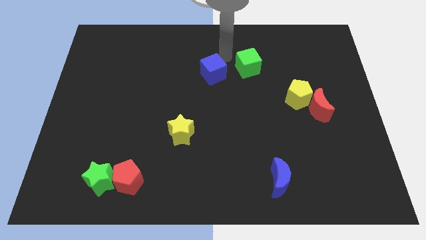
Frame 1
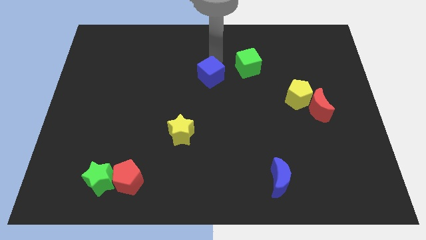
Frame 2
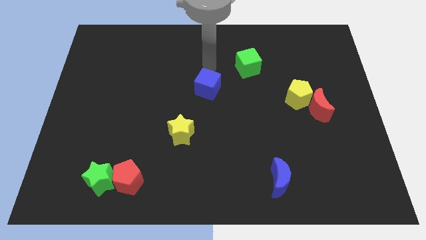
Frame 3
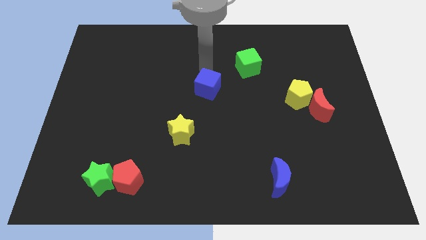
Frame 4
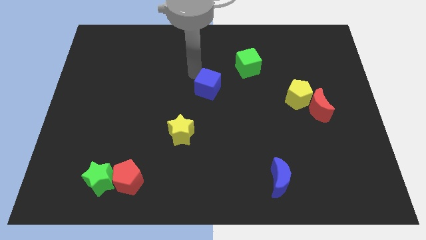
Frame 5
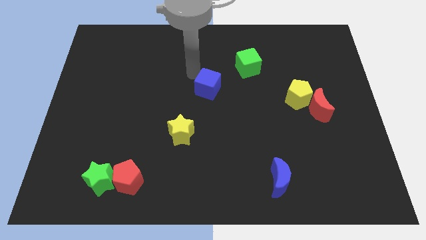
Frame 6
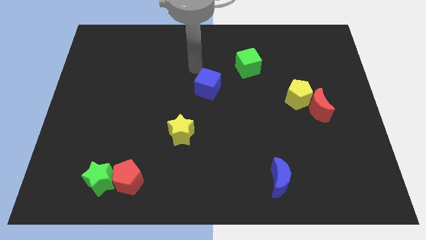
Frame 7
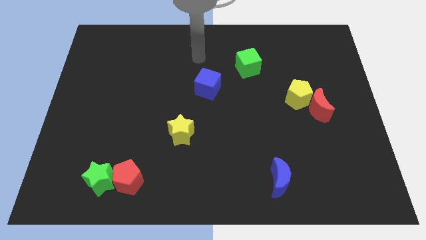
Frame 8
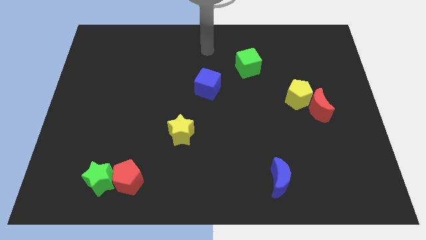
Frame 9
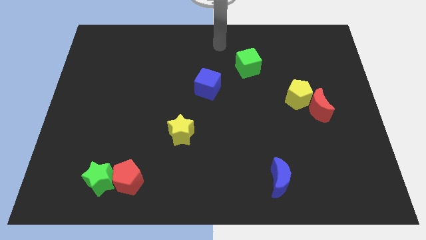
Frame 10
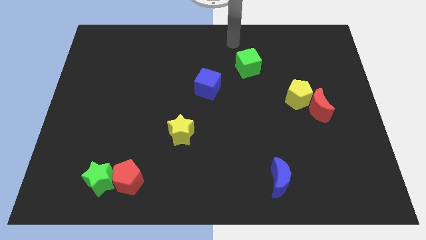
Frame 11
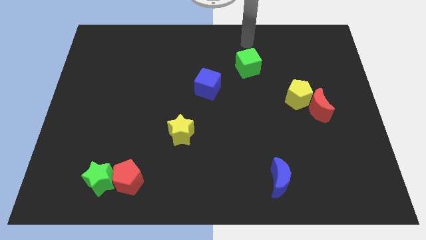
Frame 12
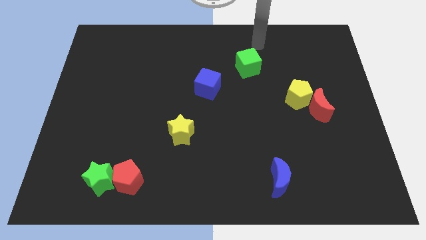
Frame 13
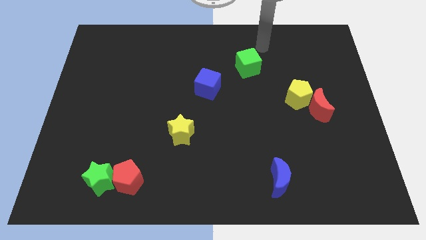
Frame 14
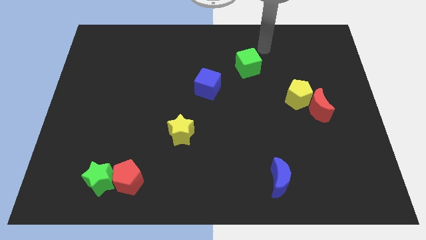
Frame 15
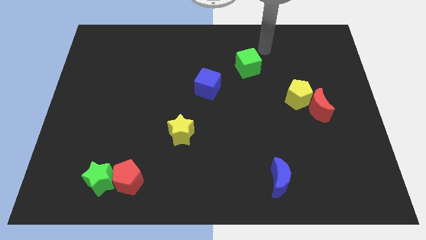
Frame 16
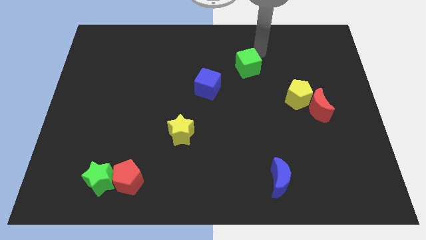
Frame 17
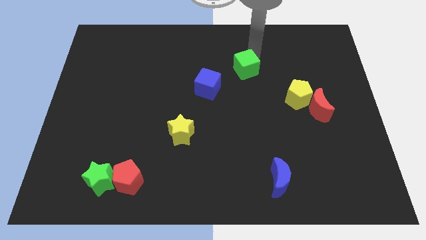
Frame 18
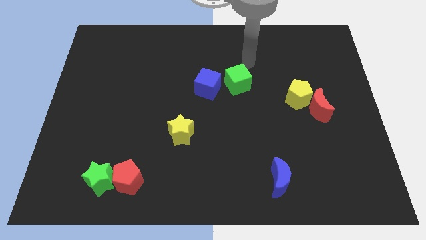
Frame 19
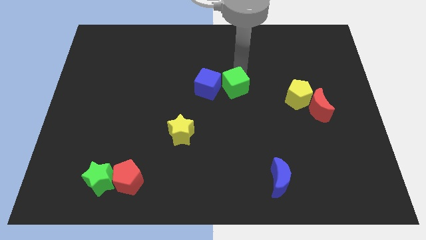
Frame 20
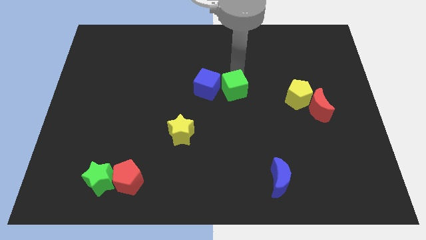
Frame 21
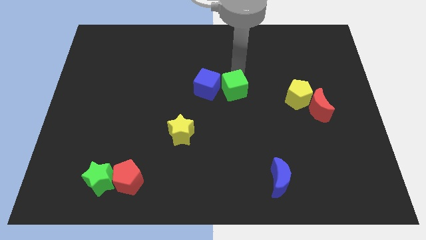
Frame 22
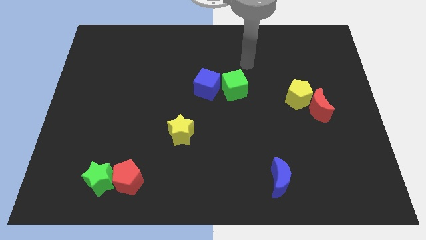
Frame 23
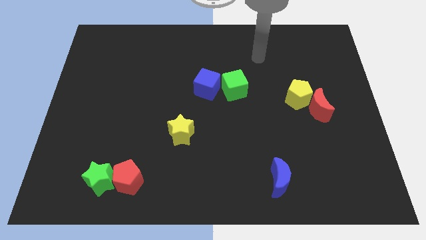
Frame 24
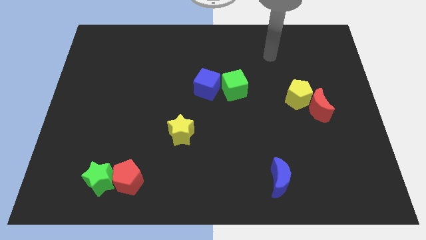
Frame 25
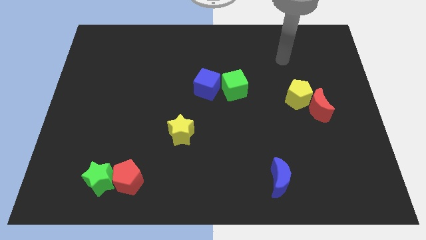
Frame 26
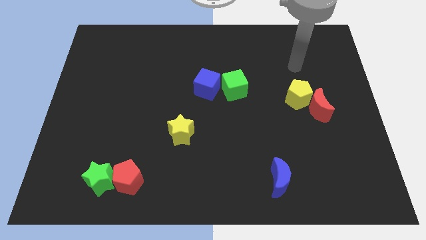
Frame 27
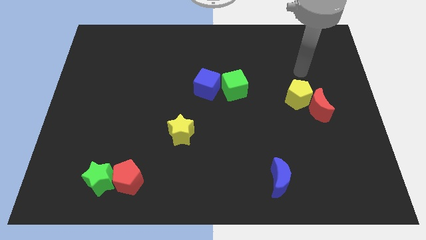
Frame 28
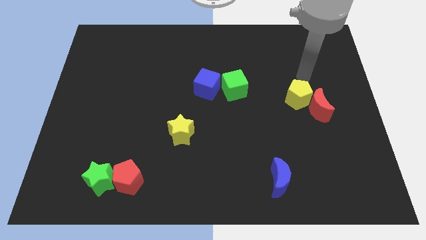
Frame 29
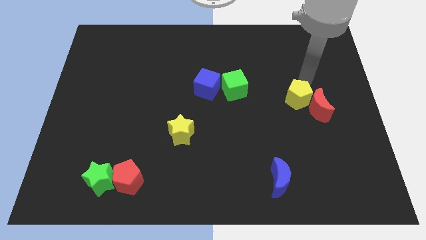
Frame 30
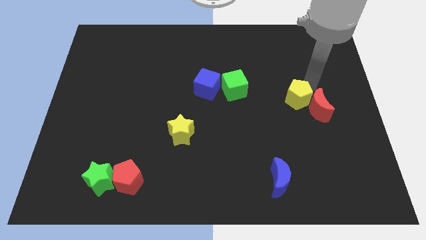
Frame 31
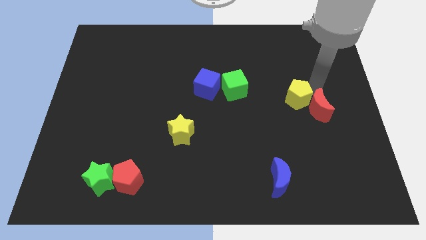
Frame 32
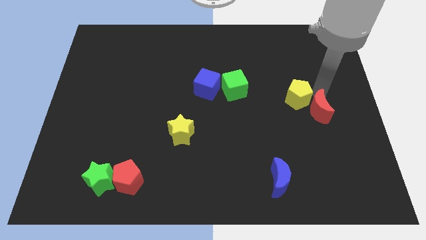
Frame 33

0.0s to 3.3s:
attach the green cube to the blue cube

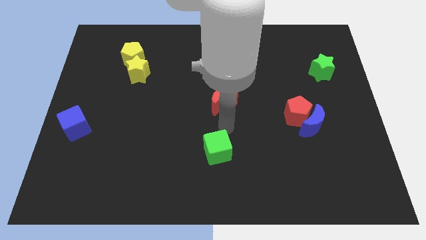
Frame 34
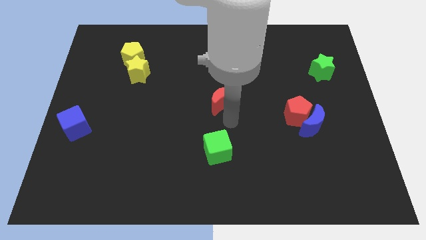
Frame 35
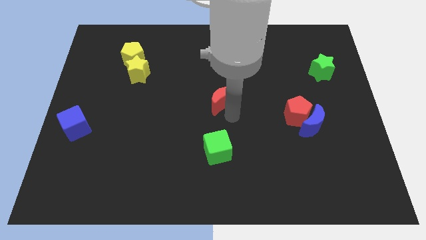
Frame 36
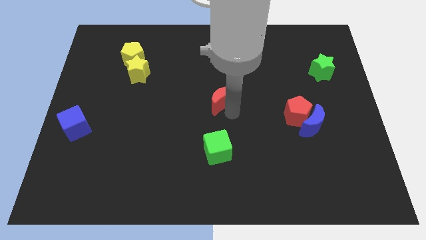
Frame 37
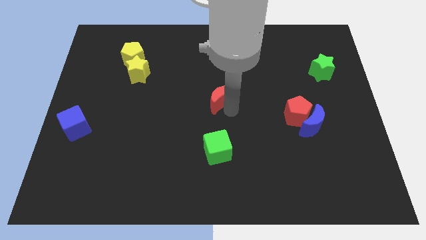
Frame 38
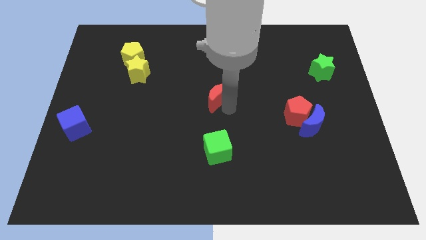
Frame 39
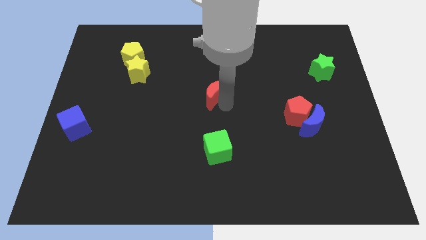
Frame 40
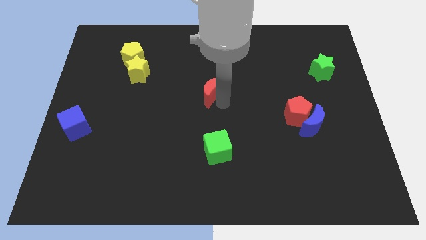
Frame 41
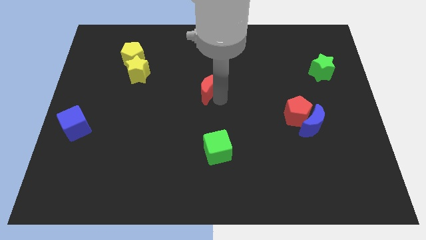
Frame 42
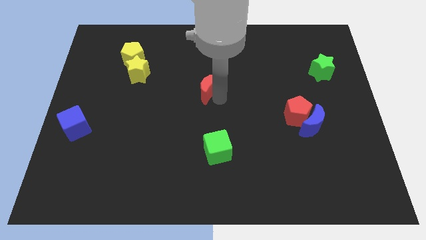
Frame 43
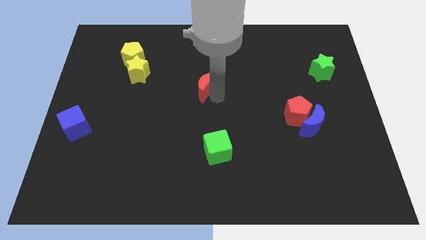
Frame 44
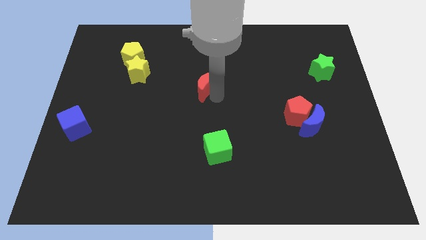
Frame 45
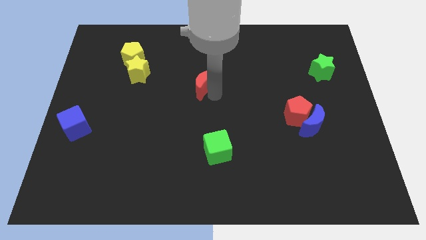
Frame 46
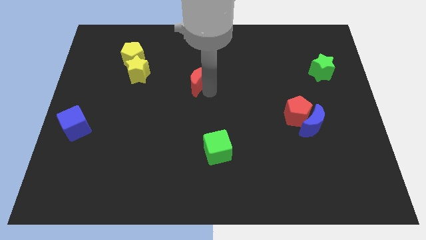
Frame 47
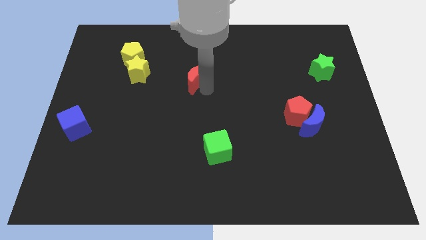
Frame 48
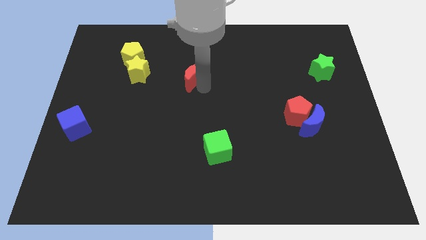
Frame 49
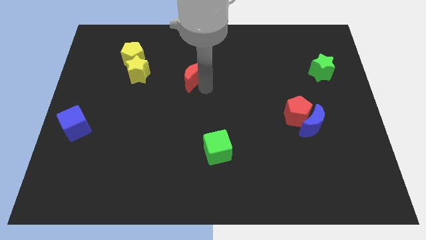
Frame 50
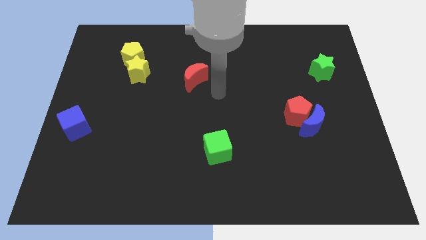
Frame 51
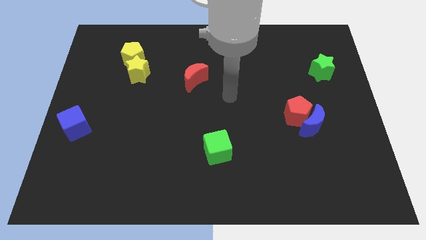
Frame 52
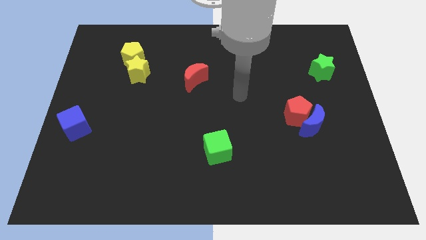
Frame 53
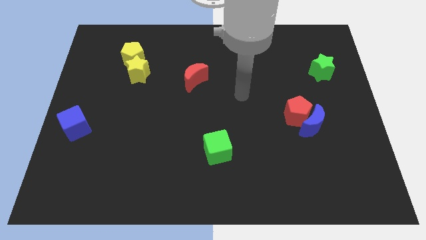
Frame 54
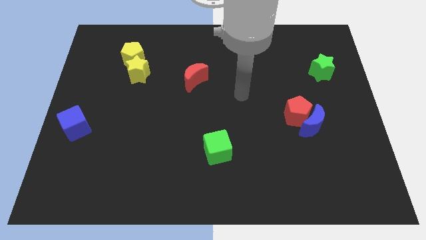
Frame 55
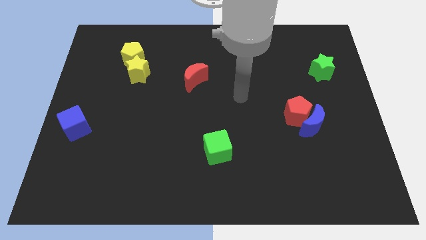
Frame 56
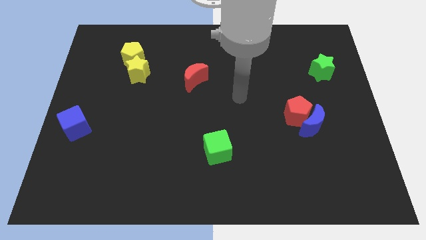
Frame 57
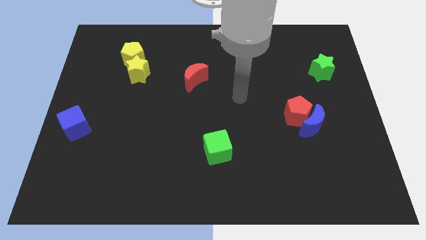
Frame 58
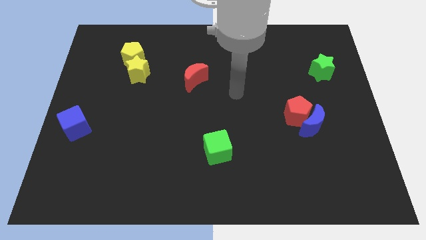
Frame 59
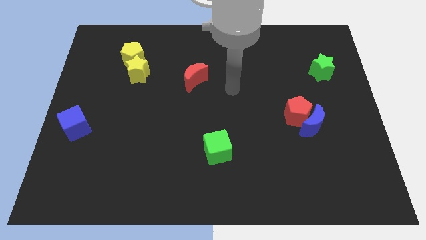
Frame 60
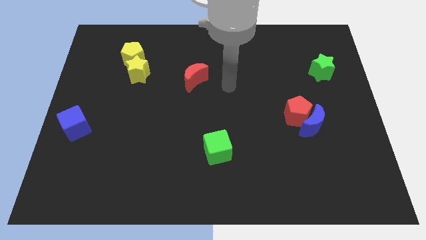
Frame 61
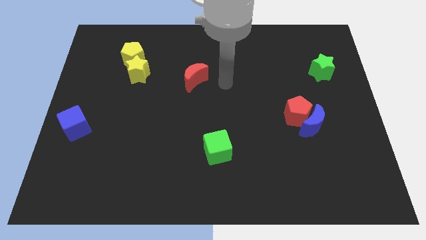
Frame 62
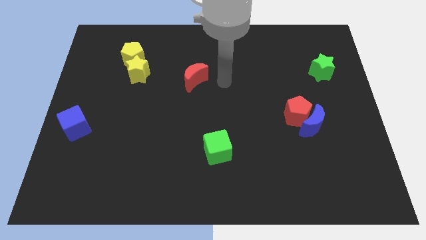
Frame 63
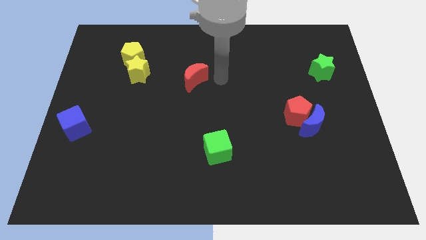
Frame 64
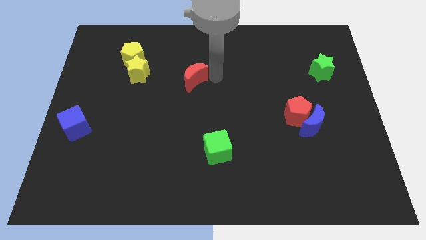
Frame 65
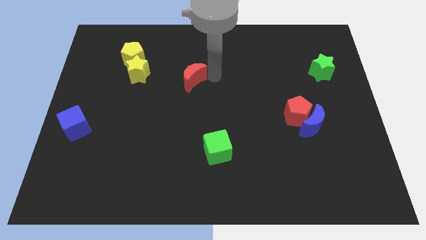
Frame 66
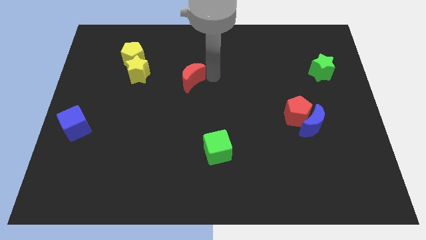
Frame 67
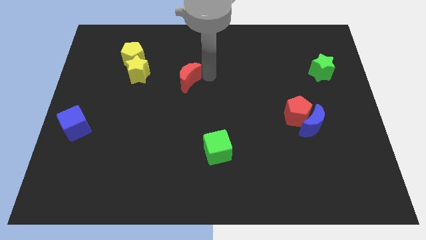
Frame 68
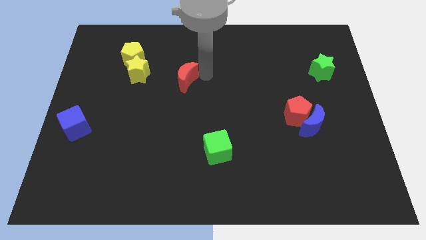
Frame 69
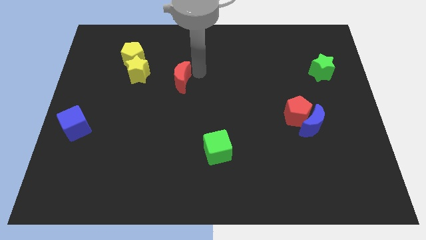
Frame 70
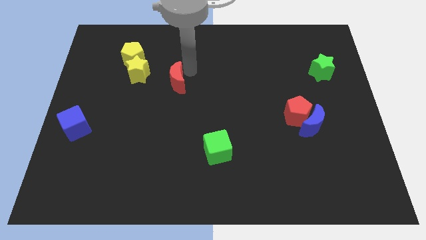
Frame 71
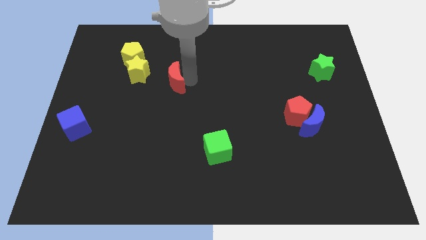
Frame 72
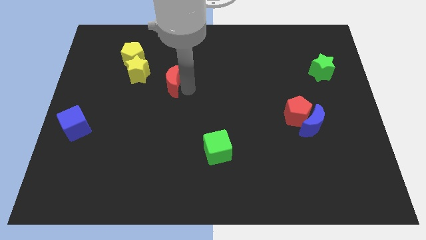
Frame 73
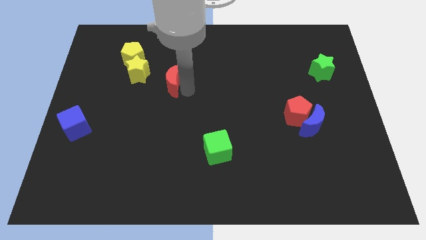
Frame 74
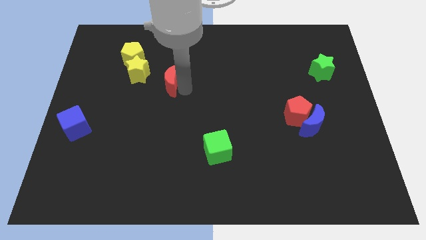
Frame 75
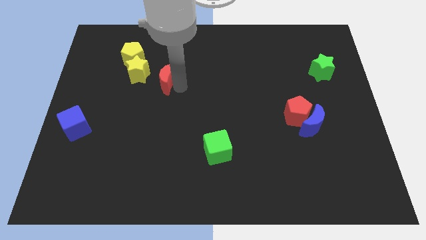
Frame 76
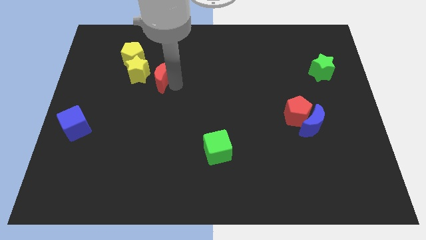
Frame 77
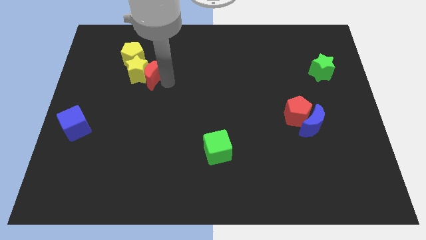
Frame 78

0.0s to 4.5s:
push the red crescent to the right of the yellow star

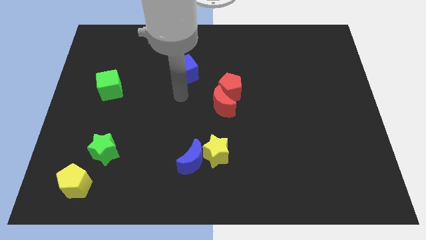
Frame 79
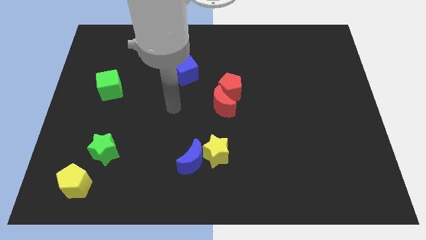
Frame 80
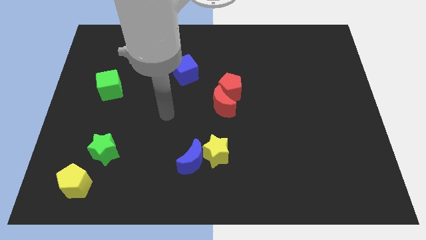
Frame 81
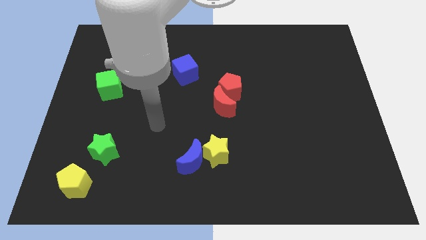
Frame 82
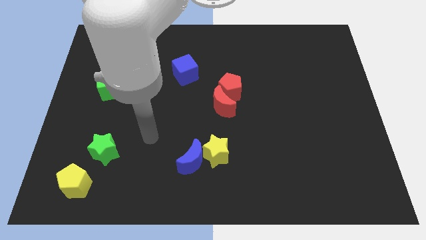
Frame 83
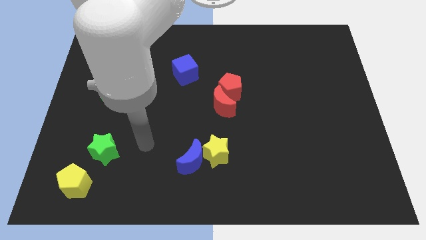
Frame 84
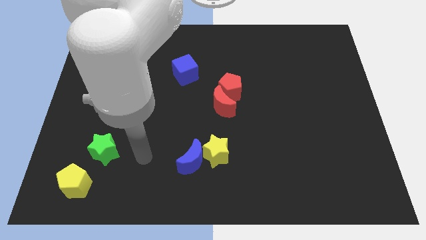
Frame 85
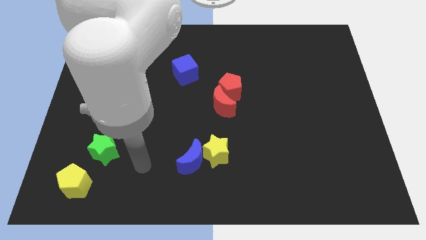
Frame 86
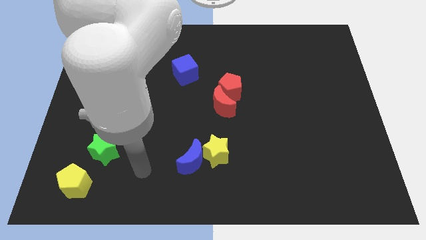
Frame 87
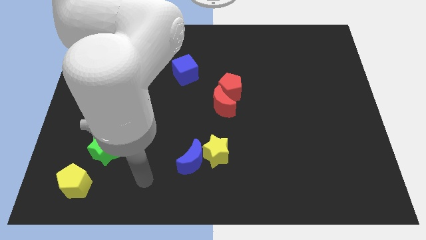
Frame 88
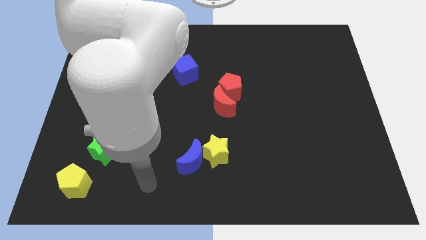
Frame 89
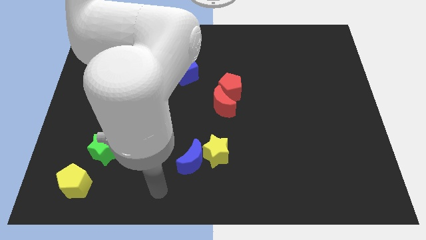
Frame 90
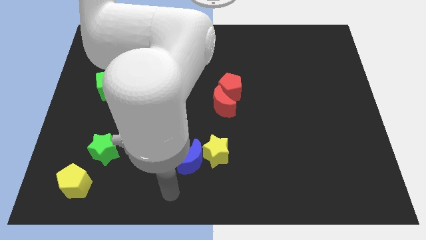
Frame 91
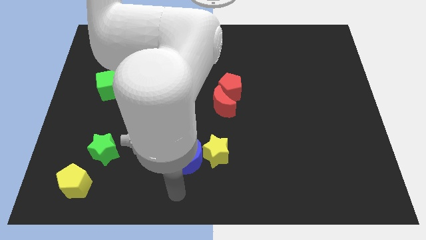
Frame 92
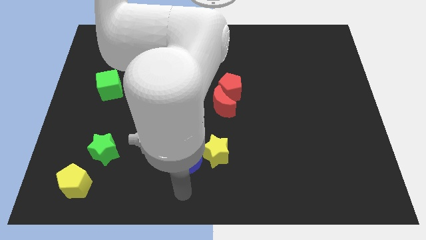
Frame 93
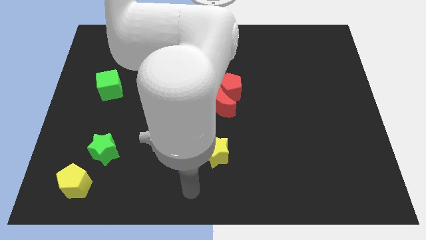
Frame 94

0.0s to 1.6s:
push the arm away from the blue cube
